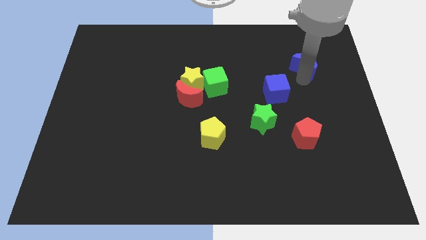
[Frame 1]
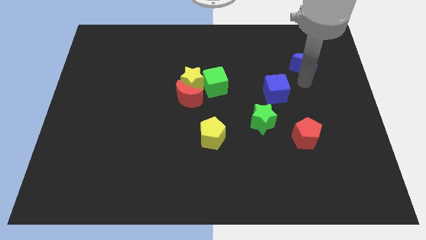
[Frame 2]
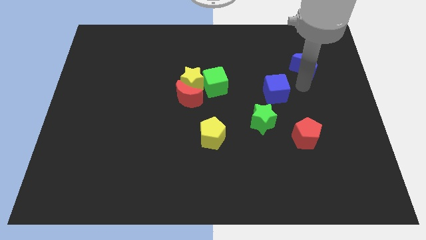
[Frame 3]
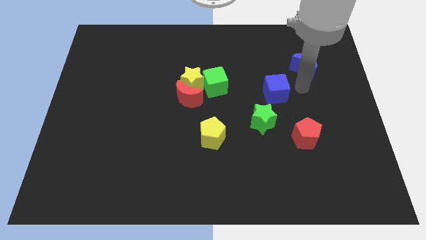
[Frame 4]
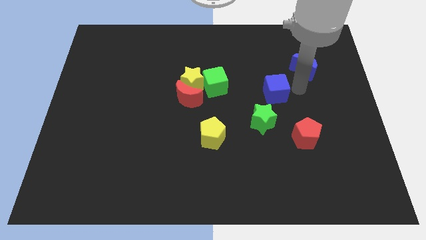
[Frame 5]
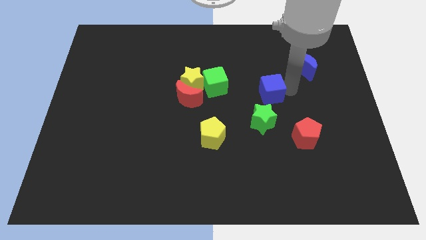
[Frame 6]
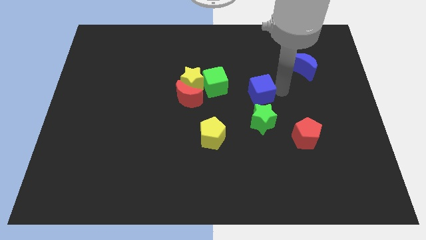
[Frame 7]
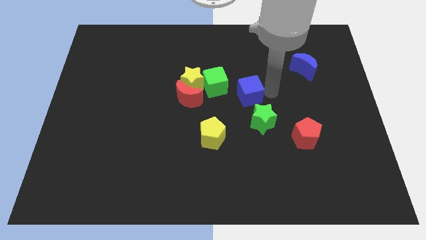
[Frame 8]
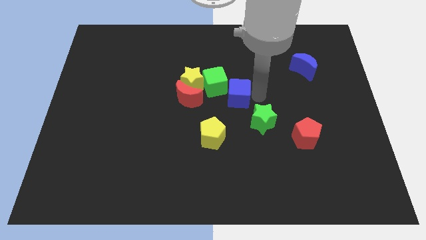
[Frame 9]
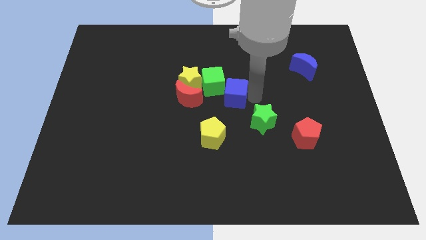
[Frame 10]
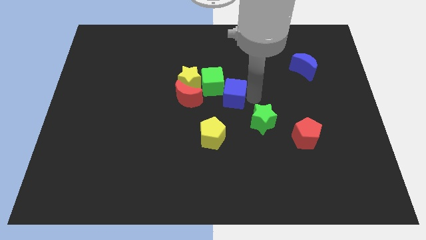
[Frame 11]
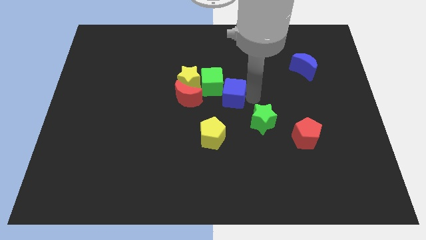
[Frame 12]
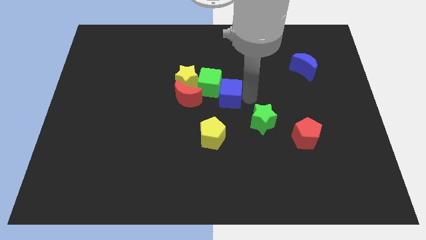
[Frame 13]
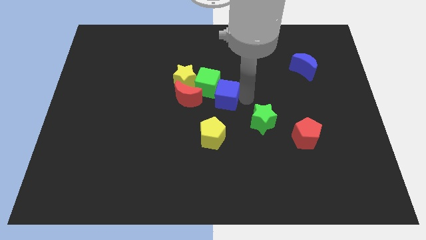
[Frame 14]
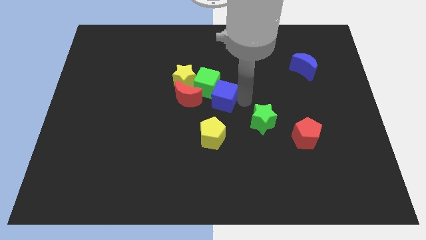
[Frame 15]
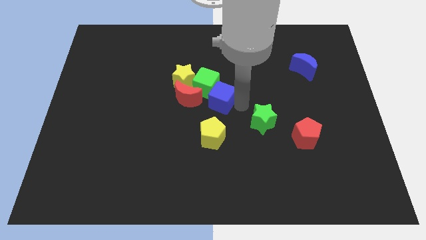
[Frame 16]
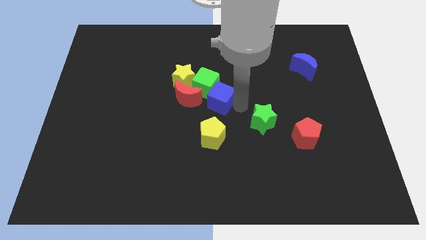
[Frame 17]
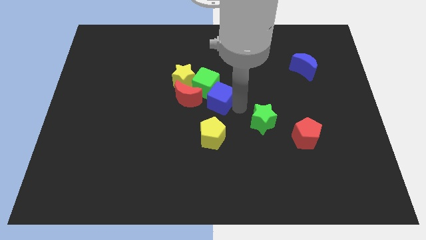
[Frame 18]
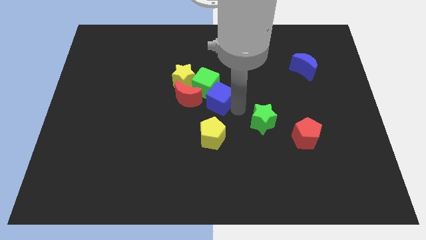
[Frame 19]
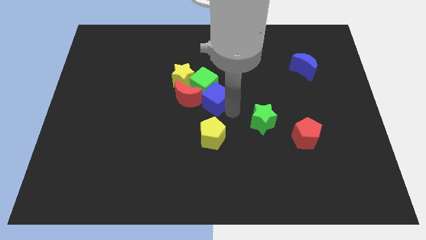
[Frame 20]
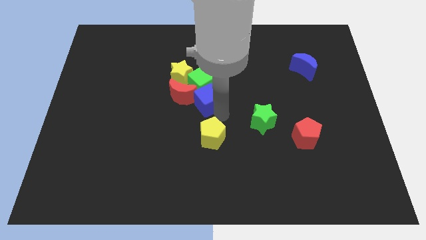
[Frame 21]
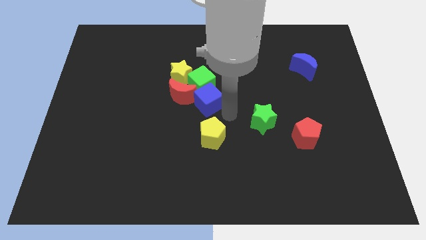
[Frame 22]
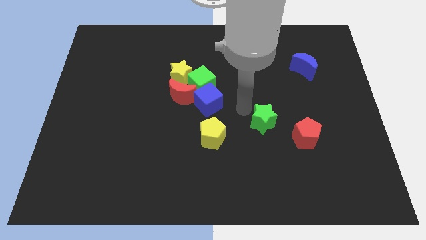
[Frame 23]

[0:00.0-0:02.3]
push the blue cube into green cube

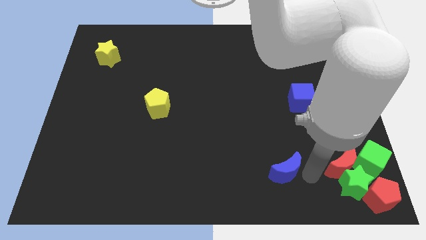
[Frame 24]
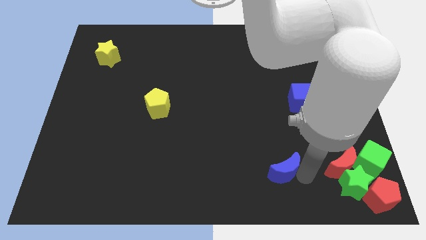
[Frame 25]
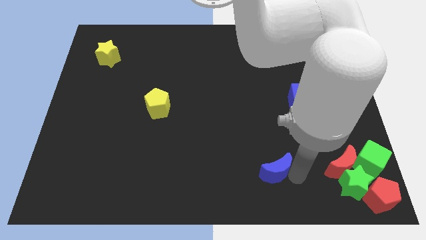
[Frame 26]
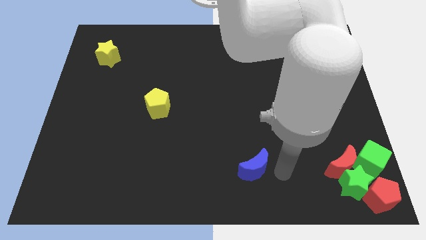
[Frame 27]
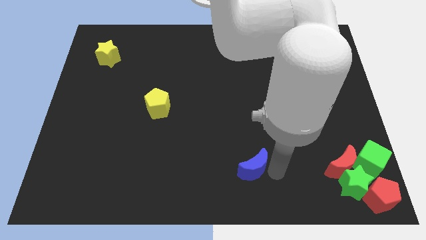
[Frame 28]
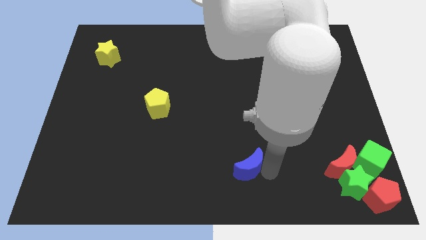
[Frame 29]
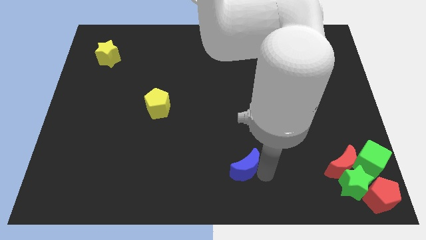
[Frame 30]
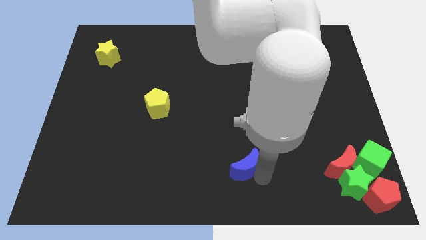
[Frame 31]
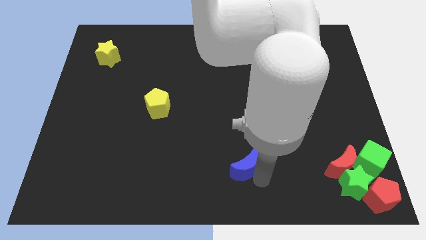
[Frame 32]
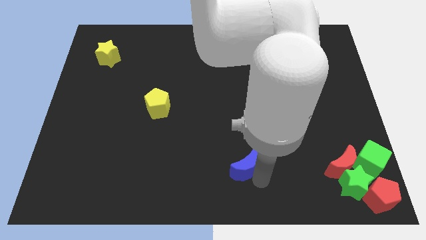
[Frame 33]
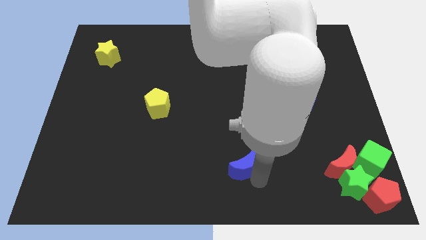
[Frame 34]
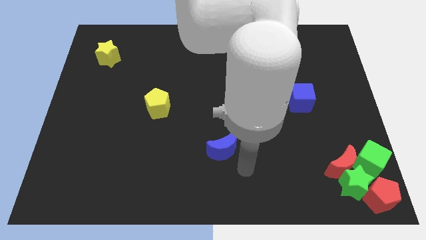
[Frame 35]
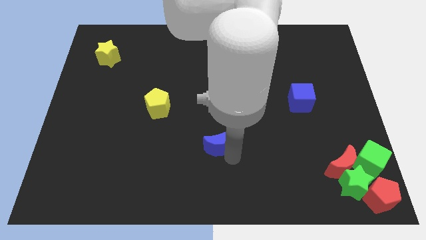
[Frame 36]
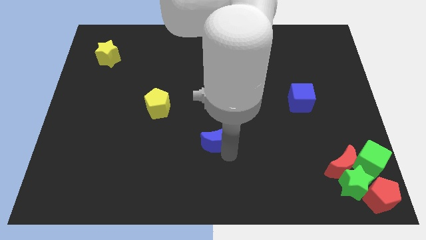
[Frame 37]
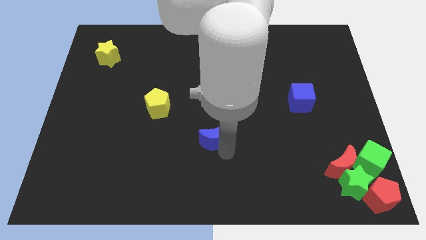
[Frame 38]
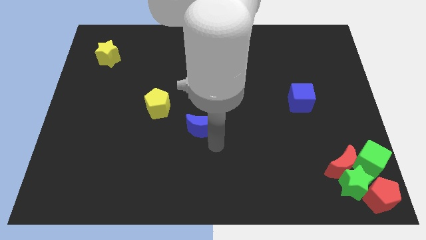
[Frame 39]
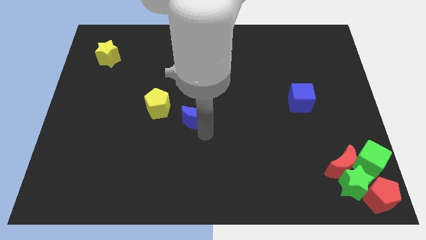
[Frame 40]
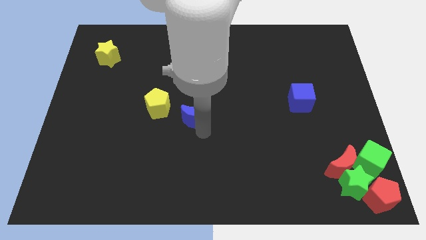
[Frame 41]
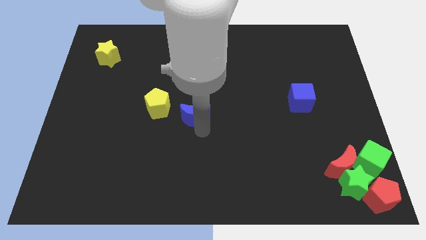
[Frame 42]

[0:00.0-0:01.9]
push the blue crescent to the bottom right of the yellow pentagon

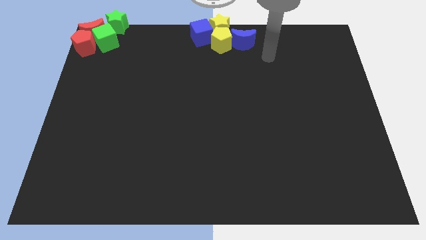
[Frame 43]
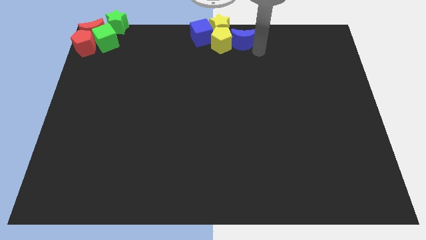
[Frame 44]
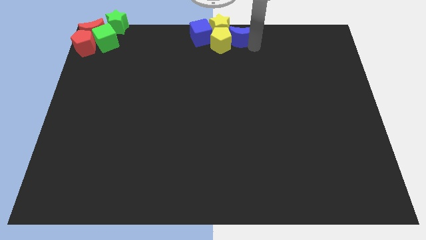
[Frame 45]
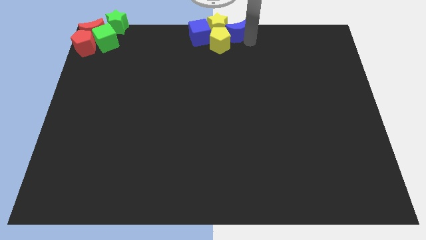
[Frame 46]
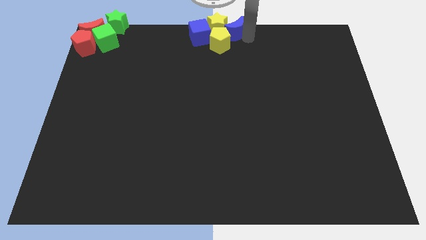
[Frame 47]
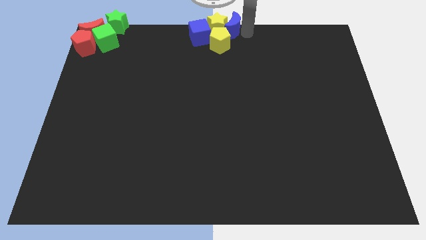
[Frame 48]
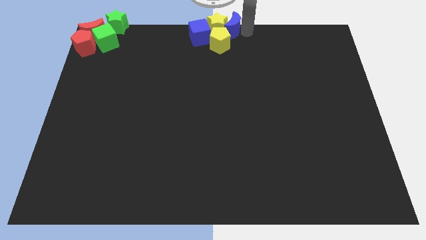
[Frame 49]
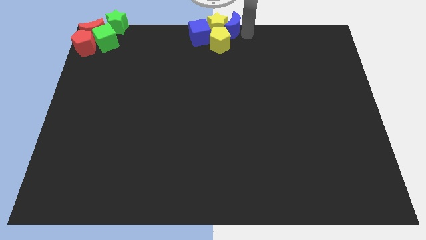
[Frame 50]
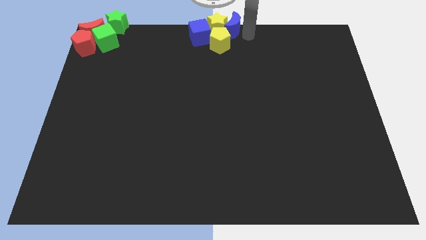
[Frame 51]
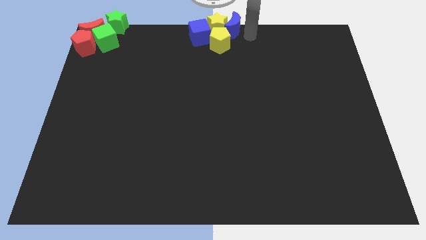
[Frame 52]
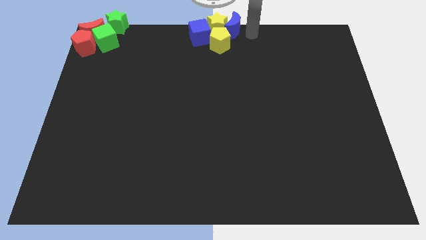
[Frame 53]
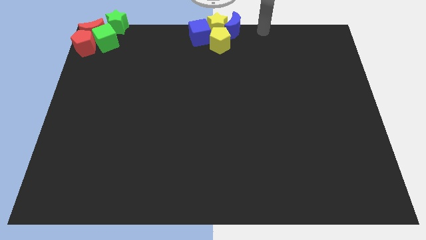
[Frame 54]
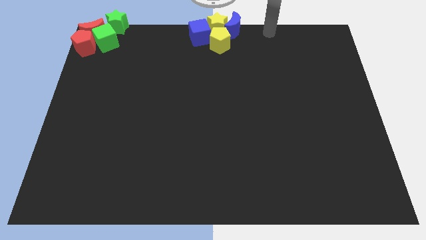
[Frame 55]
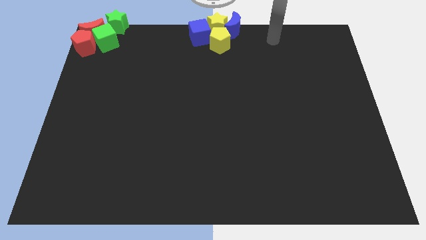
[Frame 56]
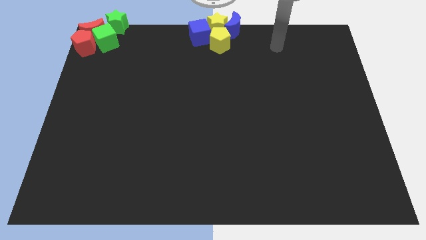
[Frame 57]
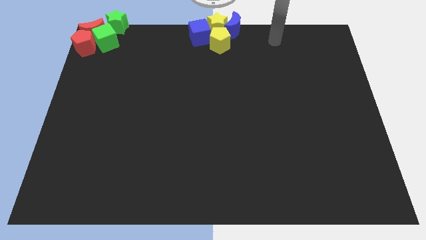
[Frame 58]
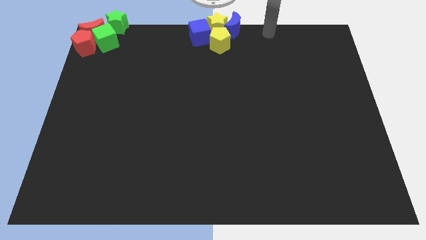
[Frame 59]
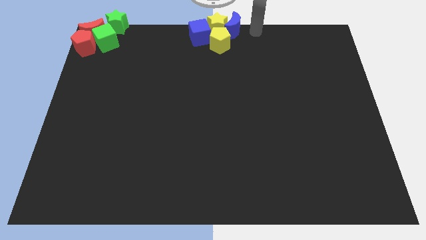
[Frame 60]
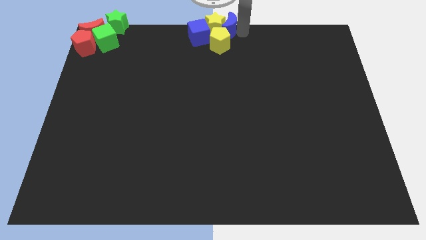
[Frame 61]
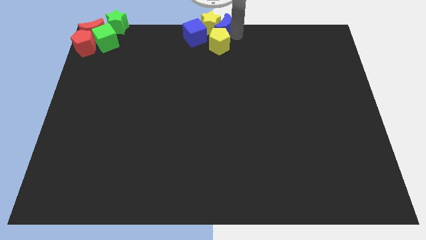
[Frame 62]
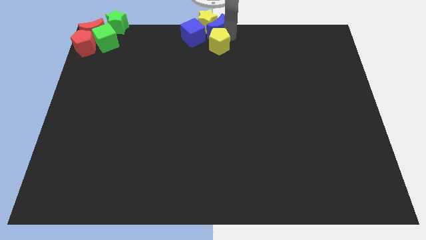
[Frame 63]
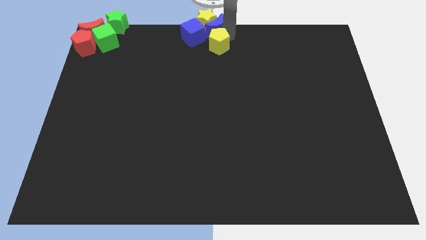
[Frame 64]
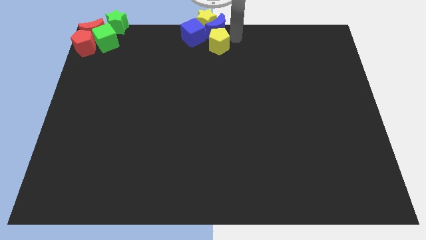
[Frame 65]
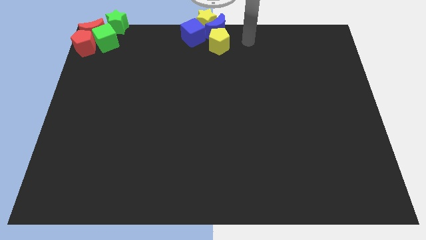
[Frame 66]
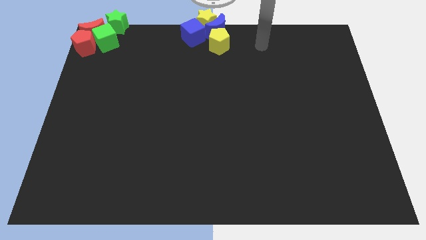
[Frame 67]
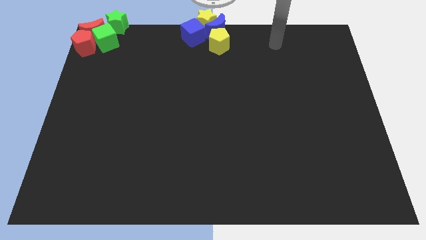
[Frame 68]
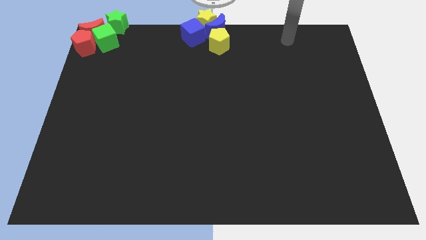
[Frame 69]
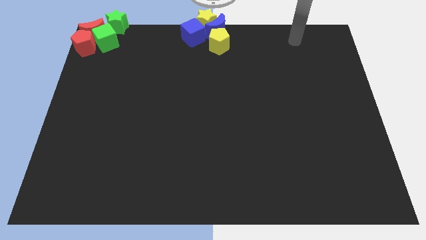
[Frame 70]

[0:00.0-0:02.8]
push the blue crescent into the group of blocks at the top center

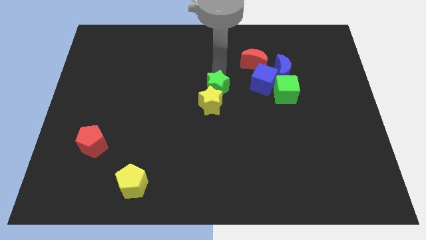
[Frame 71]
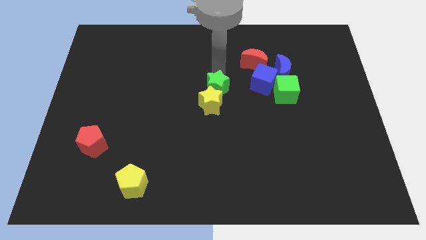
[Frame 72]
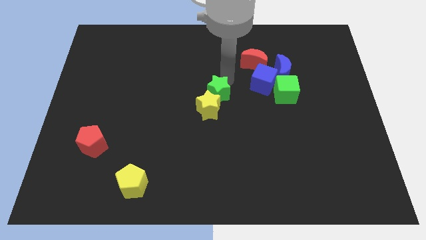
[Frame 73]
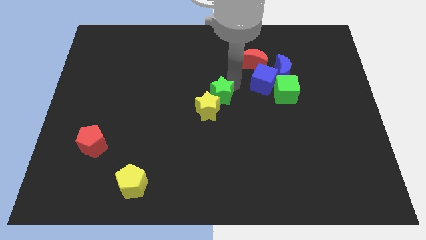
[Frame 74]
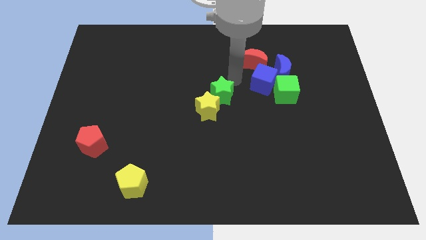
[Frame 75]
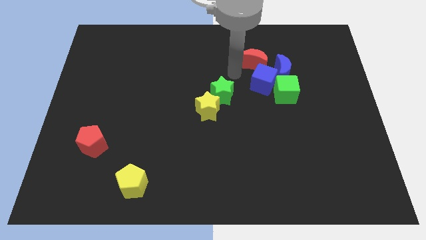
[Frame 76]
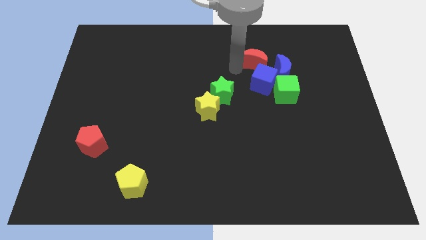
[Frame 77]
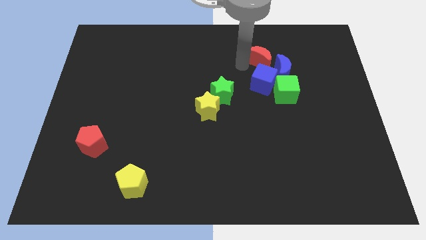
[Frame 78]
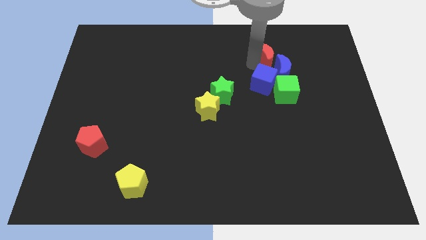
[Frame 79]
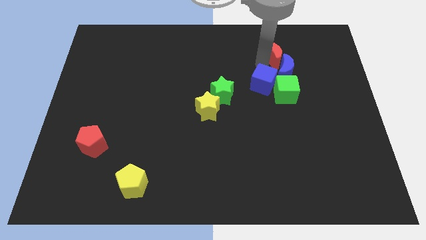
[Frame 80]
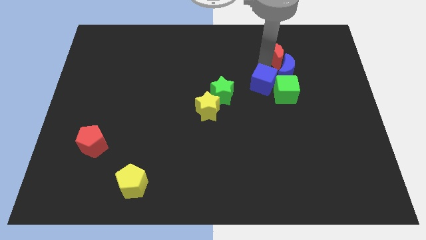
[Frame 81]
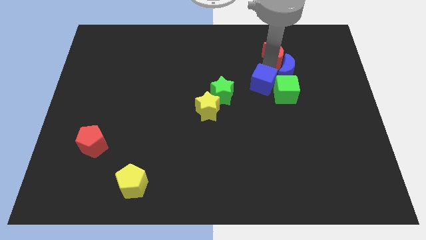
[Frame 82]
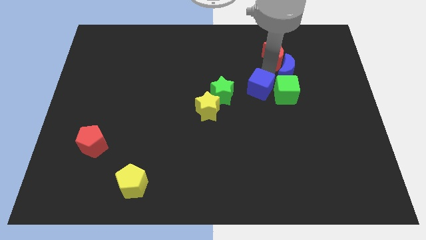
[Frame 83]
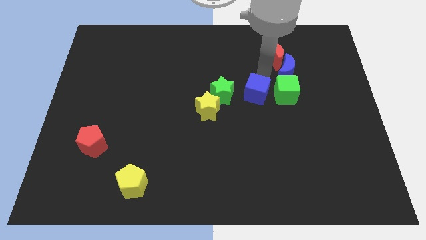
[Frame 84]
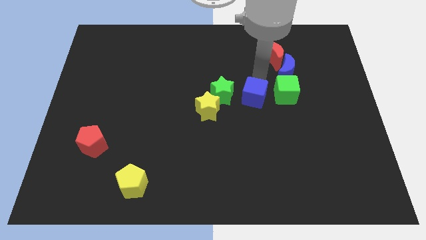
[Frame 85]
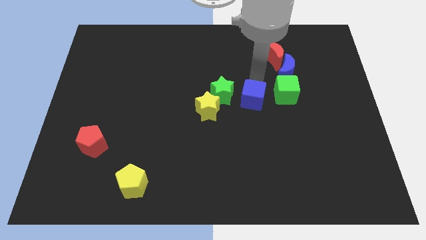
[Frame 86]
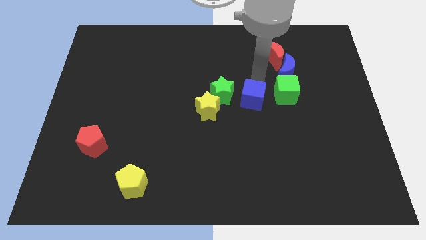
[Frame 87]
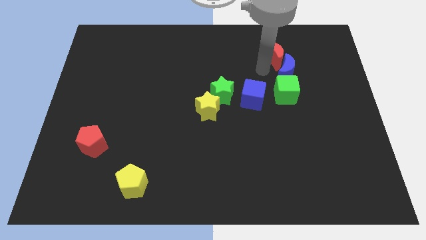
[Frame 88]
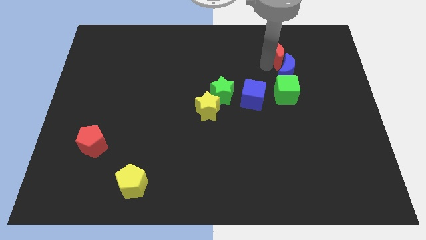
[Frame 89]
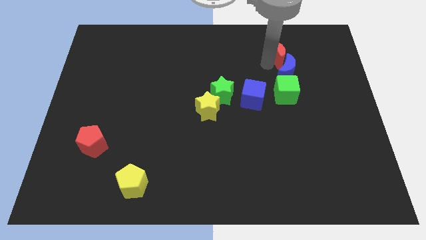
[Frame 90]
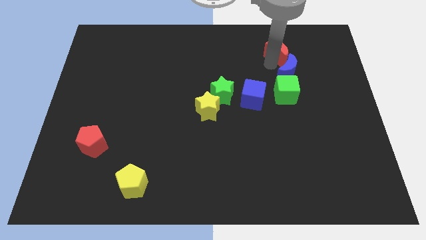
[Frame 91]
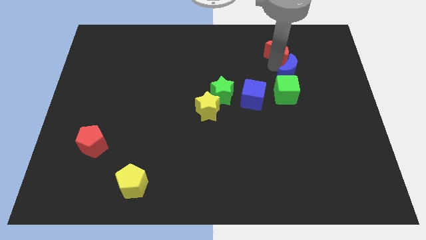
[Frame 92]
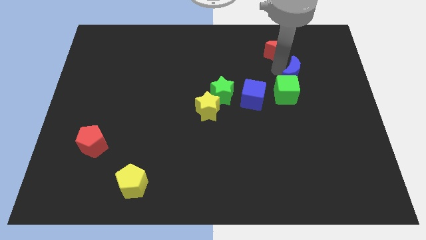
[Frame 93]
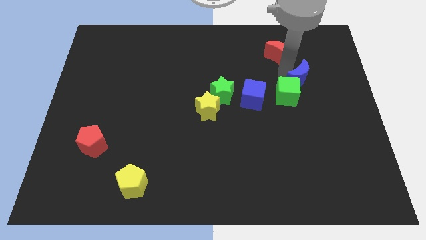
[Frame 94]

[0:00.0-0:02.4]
push blue cube slightly towards down
